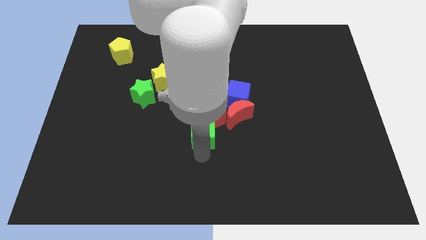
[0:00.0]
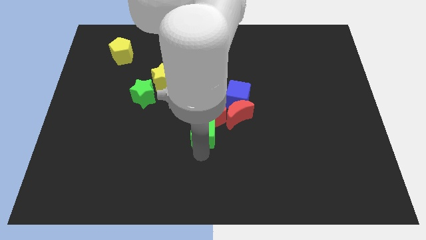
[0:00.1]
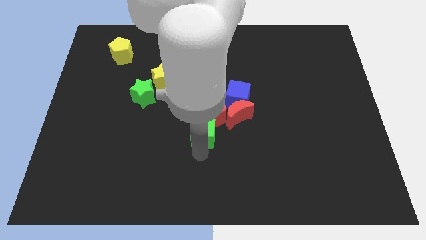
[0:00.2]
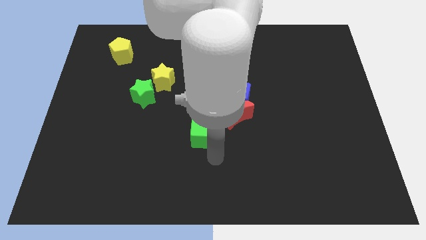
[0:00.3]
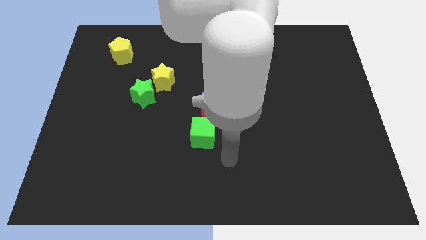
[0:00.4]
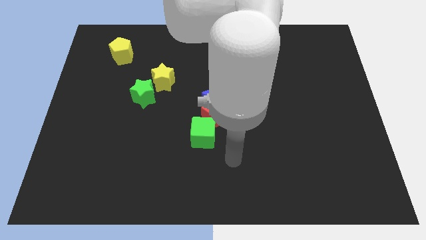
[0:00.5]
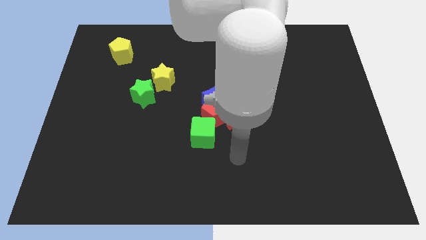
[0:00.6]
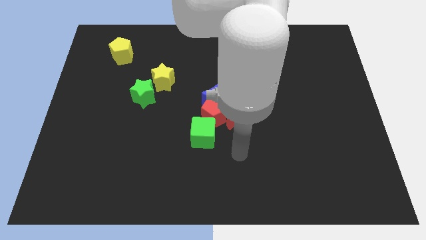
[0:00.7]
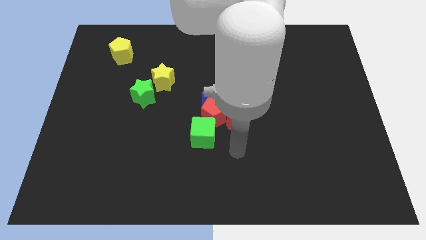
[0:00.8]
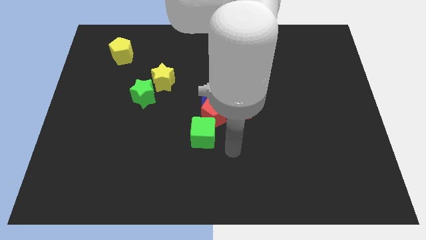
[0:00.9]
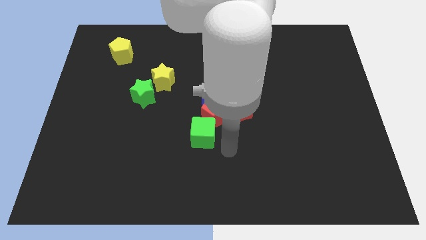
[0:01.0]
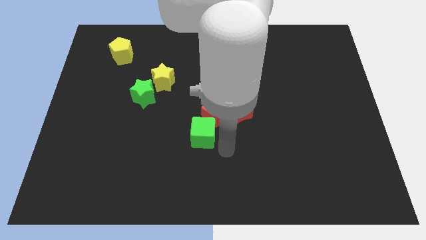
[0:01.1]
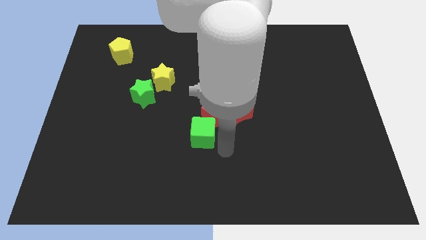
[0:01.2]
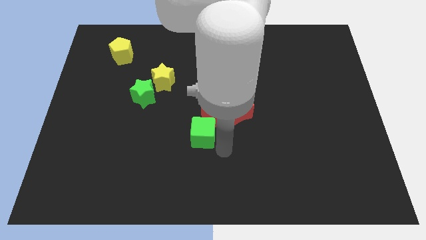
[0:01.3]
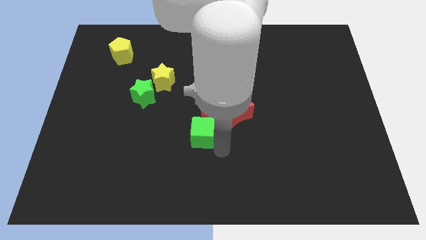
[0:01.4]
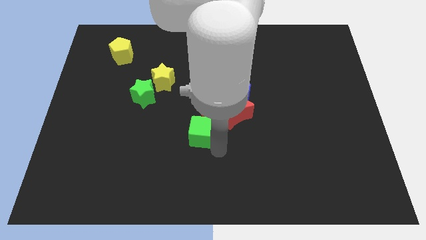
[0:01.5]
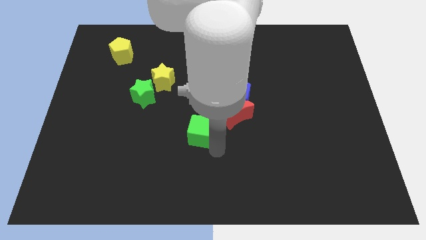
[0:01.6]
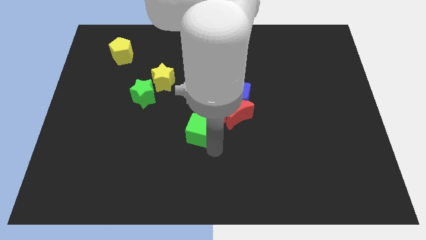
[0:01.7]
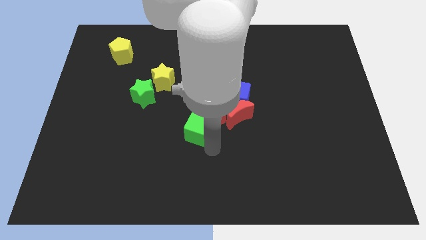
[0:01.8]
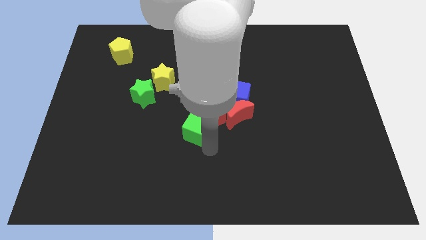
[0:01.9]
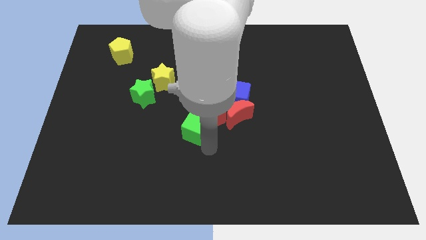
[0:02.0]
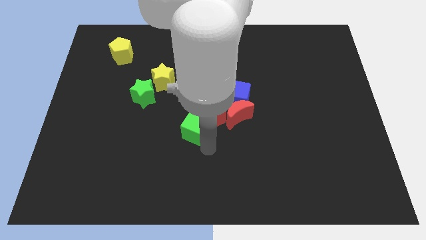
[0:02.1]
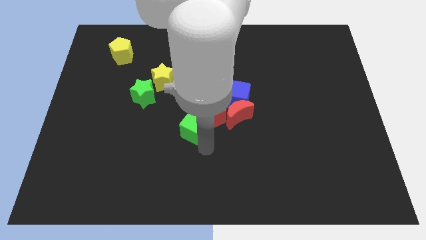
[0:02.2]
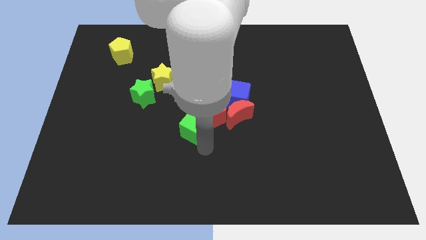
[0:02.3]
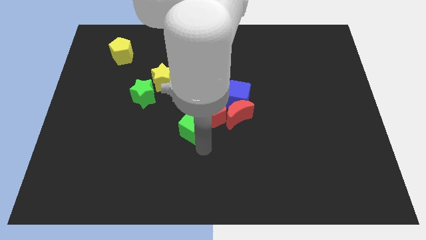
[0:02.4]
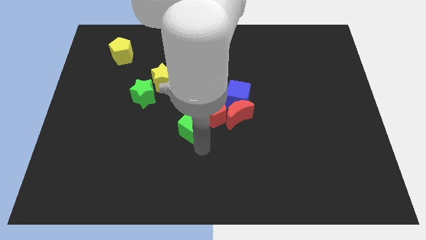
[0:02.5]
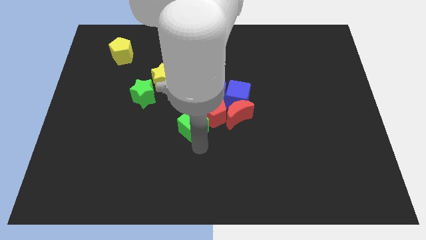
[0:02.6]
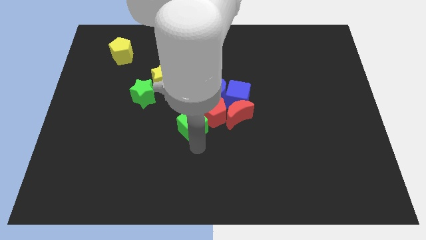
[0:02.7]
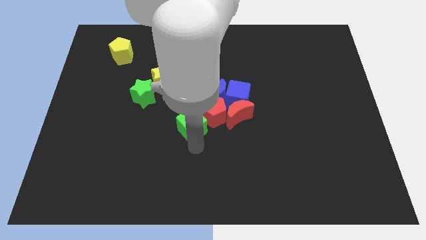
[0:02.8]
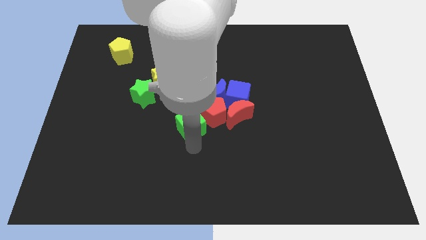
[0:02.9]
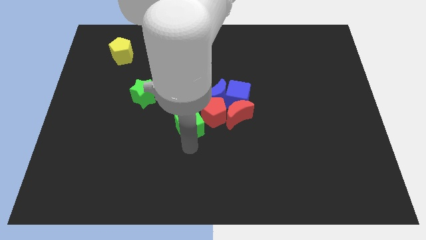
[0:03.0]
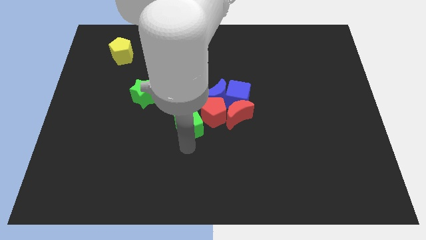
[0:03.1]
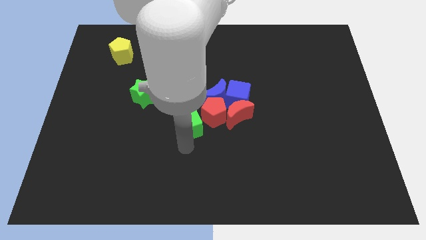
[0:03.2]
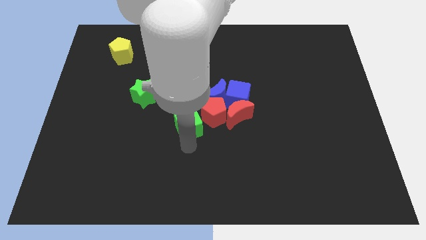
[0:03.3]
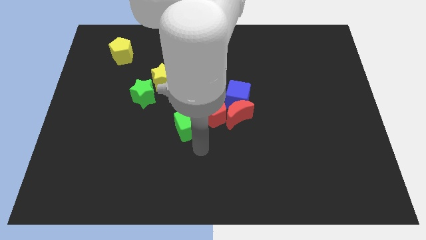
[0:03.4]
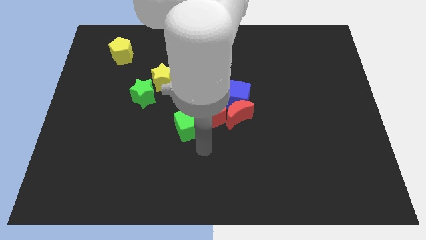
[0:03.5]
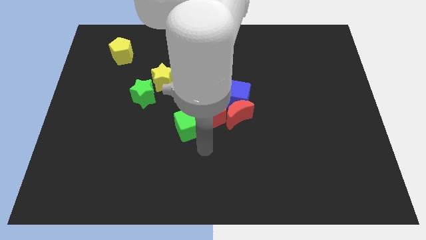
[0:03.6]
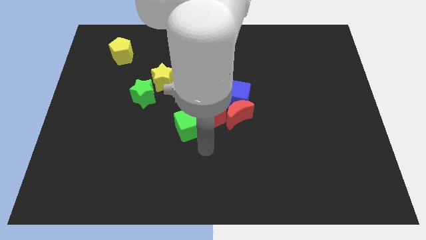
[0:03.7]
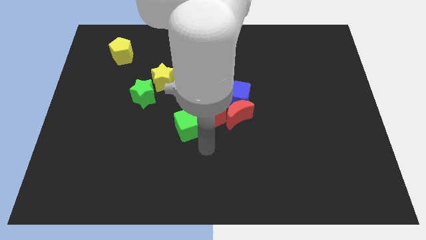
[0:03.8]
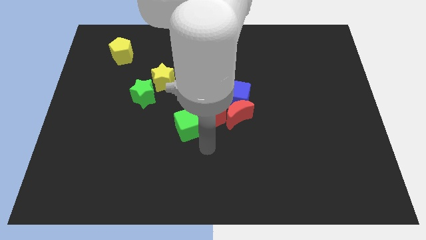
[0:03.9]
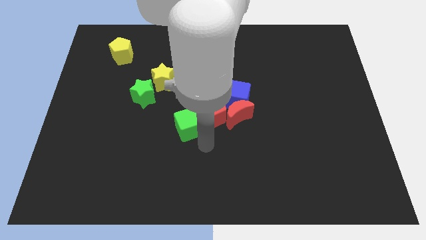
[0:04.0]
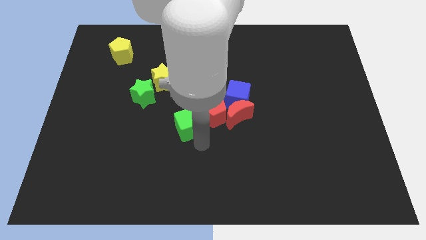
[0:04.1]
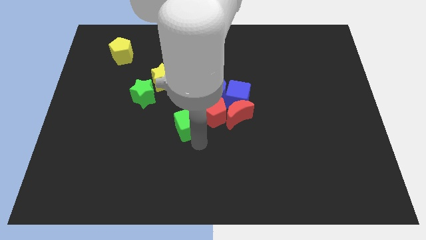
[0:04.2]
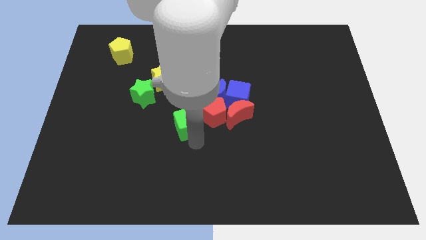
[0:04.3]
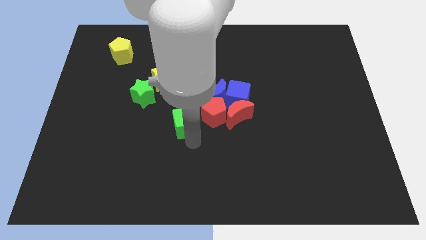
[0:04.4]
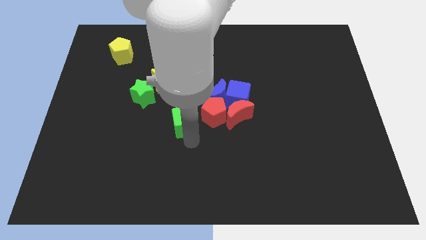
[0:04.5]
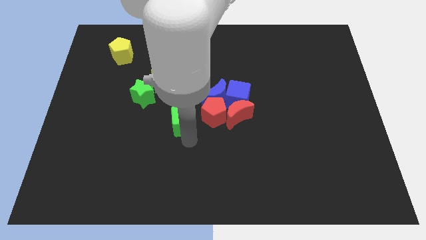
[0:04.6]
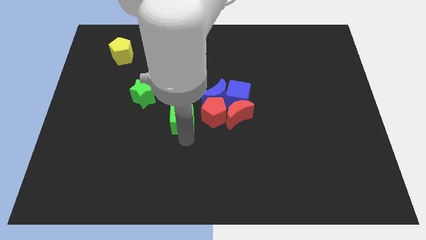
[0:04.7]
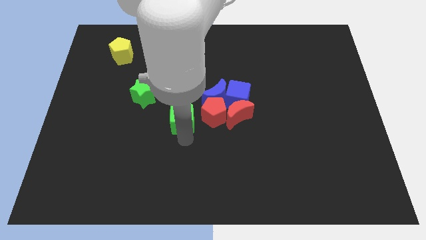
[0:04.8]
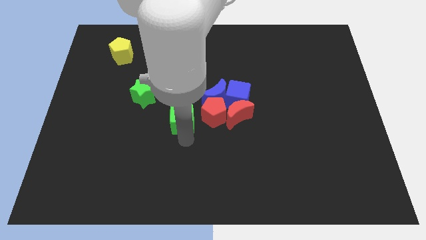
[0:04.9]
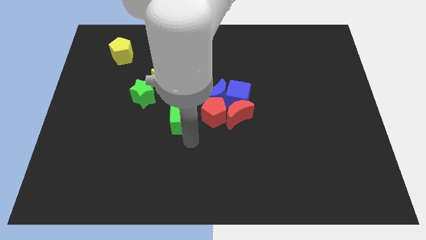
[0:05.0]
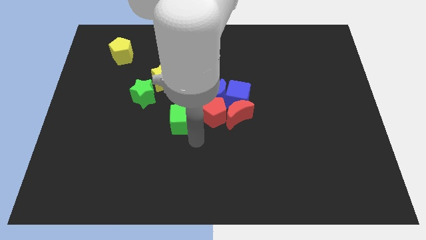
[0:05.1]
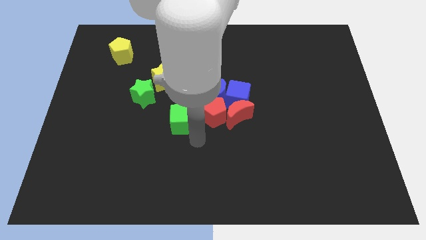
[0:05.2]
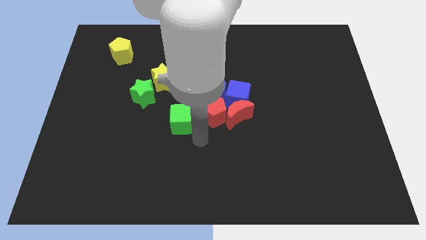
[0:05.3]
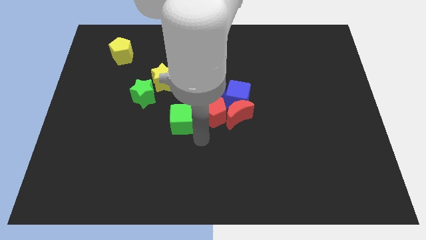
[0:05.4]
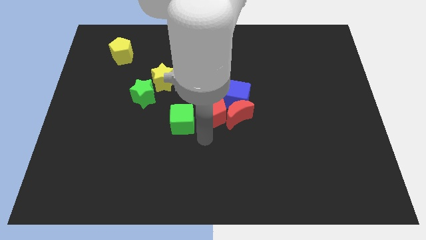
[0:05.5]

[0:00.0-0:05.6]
push the green cube to the left of the red pentagon

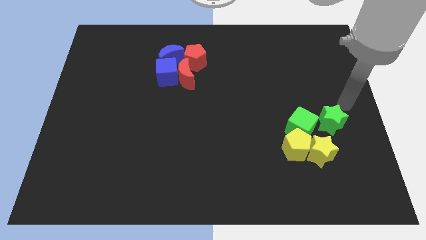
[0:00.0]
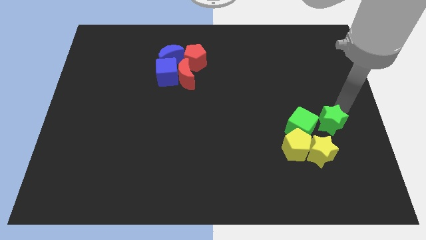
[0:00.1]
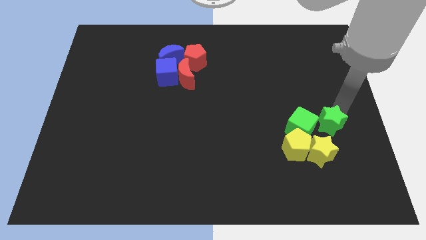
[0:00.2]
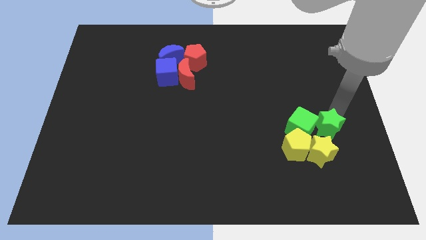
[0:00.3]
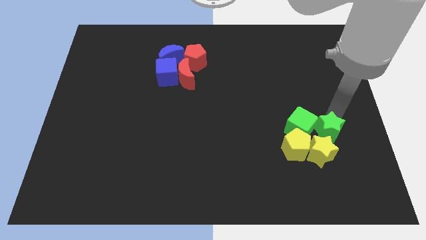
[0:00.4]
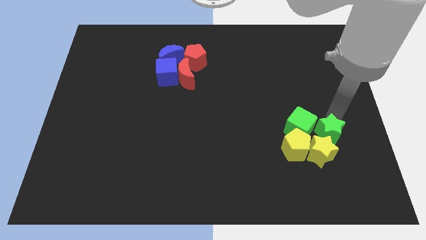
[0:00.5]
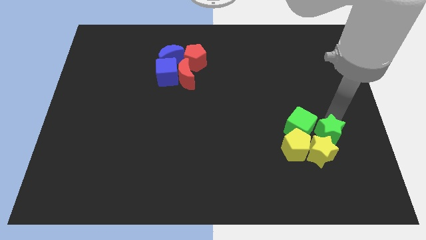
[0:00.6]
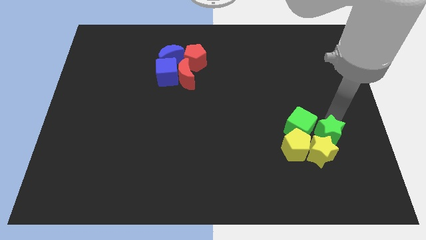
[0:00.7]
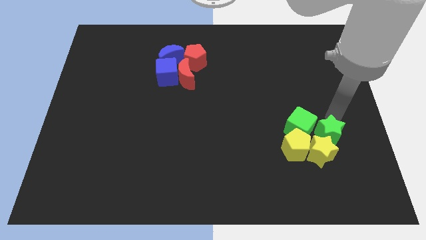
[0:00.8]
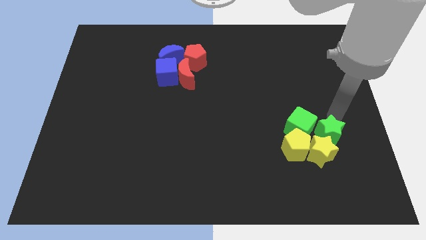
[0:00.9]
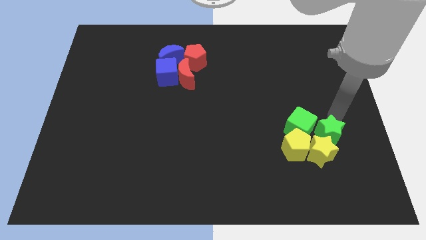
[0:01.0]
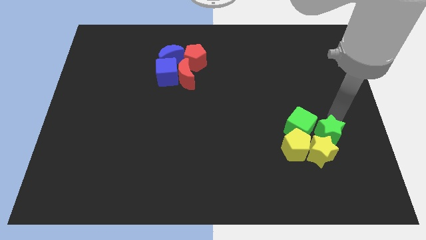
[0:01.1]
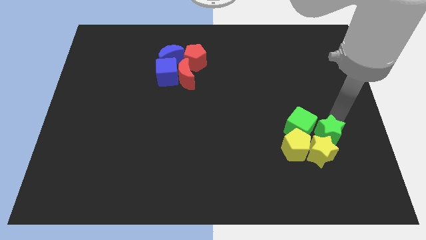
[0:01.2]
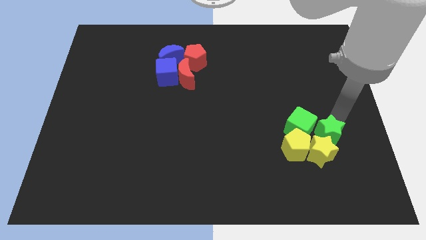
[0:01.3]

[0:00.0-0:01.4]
push the green star into the yellow star

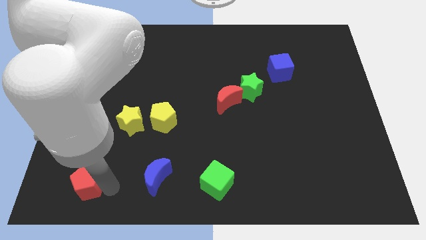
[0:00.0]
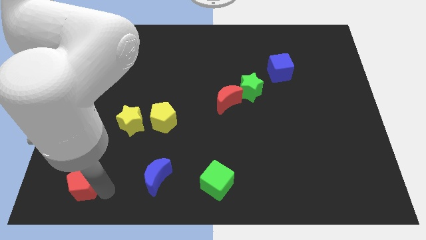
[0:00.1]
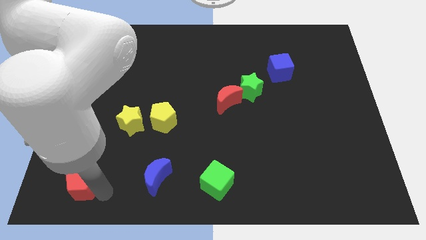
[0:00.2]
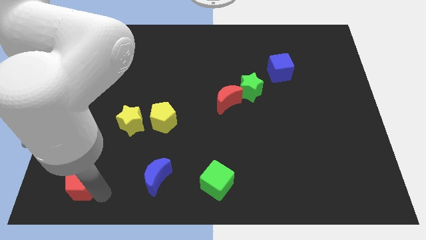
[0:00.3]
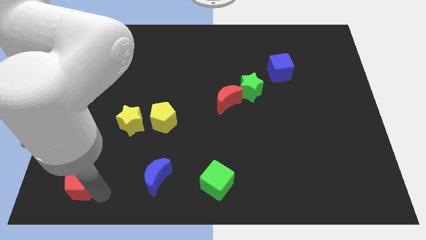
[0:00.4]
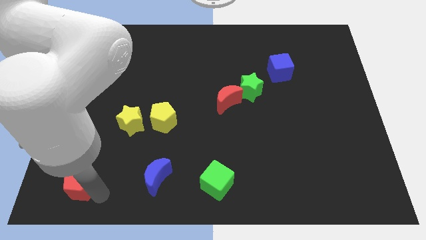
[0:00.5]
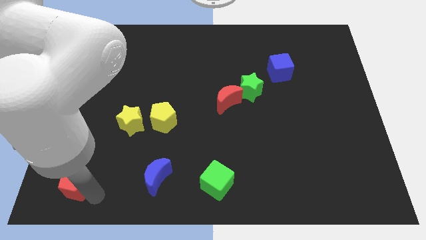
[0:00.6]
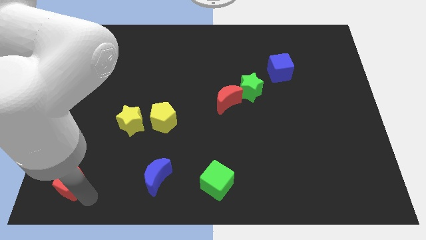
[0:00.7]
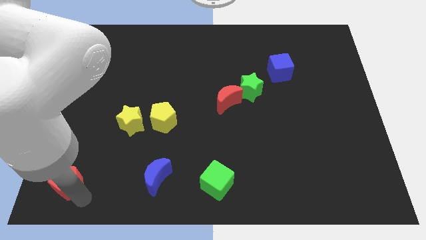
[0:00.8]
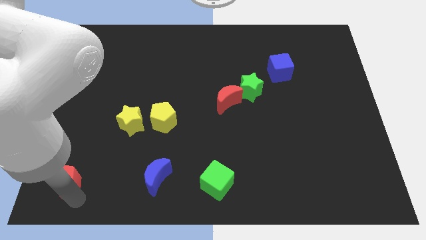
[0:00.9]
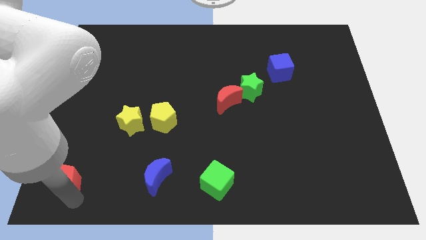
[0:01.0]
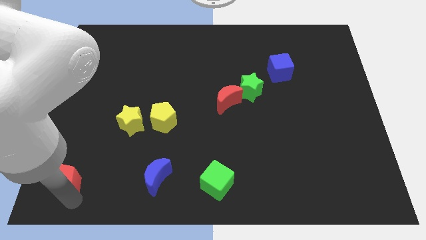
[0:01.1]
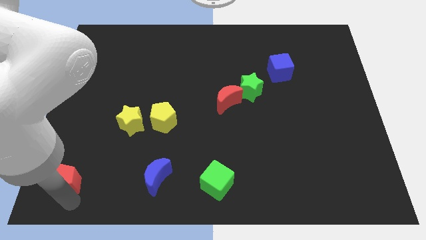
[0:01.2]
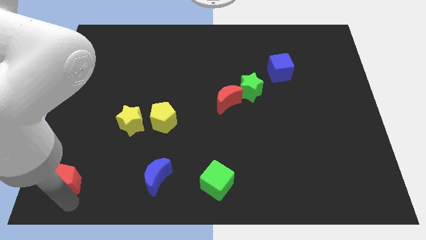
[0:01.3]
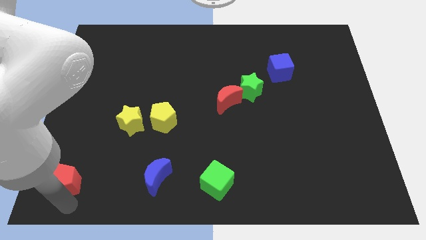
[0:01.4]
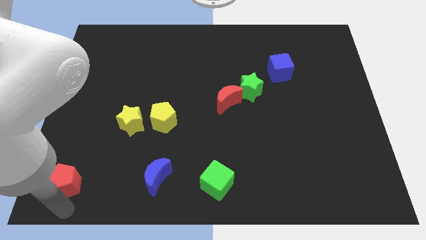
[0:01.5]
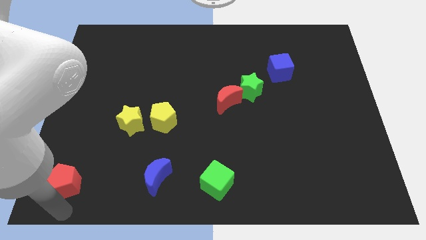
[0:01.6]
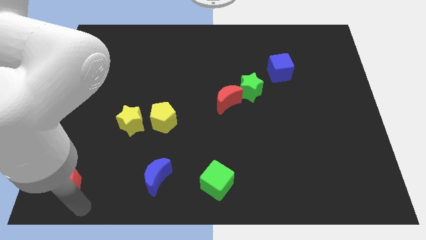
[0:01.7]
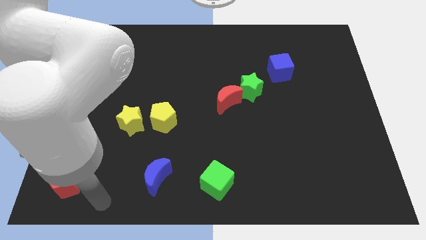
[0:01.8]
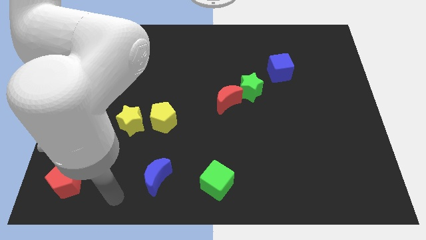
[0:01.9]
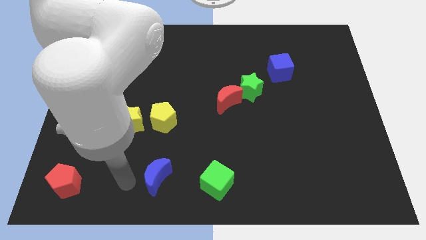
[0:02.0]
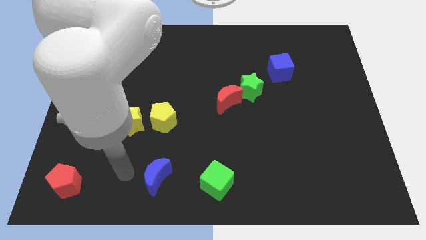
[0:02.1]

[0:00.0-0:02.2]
move the red pentagon to the bottom left
